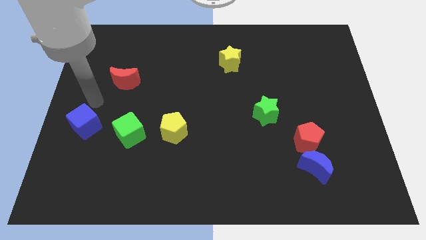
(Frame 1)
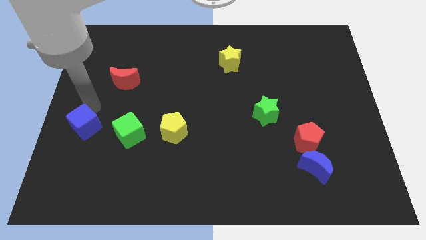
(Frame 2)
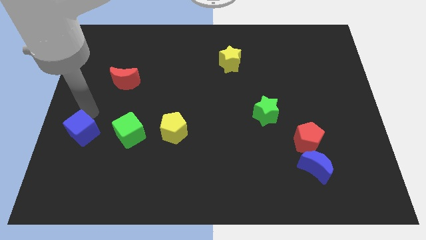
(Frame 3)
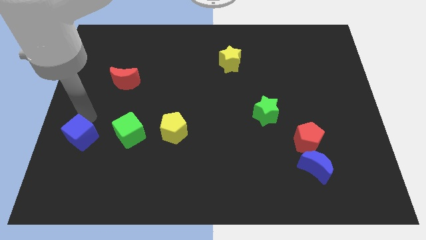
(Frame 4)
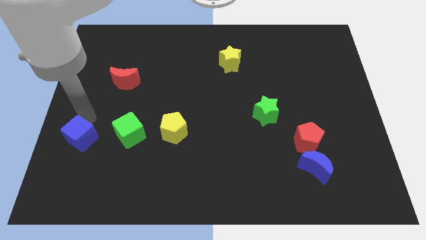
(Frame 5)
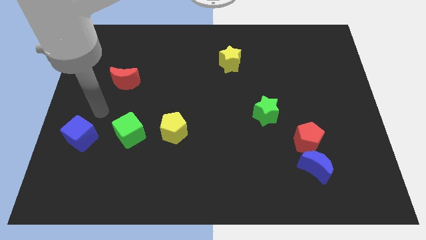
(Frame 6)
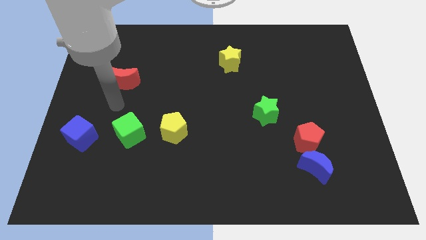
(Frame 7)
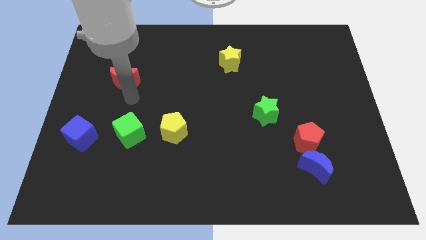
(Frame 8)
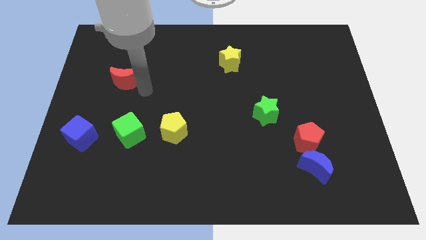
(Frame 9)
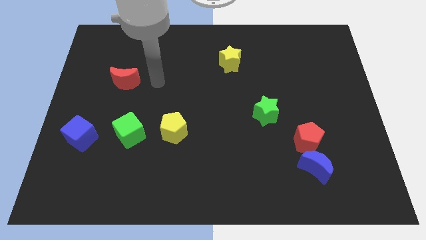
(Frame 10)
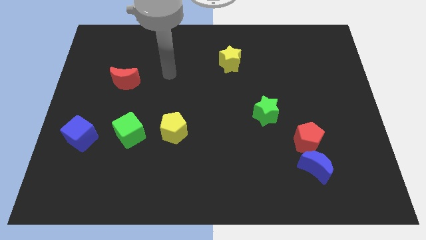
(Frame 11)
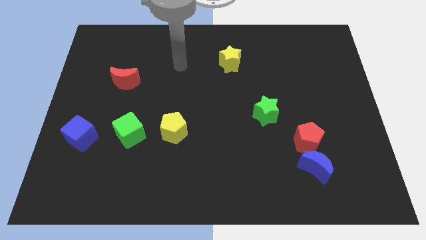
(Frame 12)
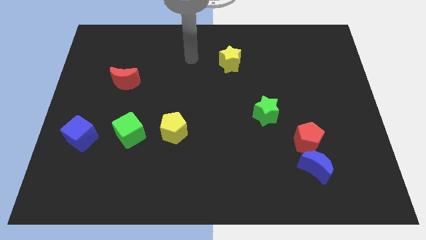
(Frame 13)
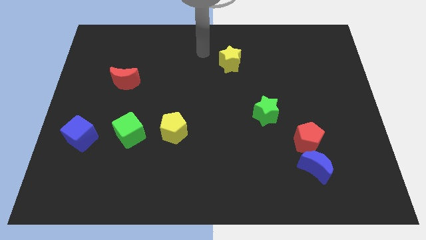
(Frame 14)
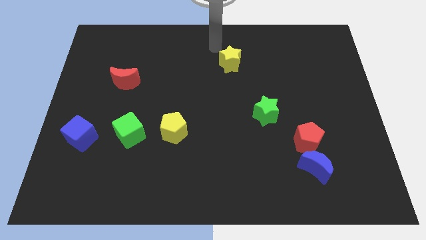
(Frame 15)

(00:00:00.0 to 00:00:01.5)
slightly move the blue cube towards the bottom of the board

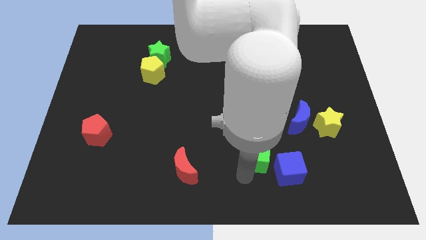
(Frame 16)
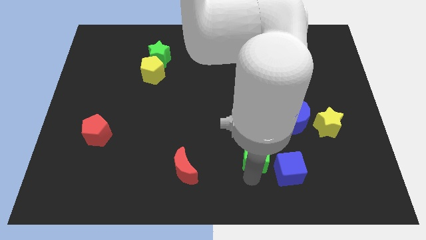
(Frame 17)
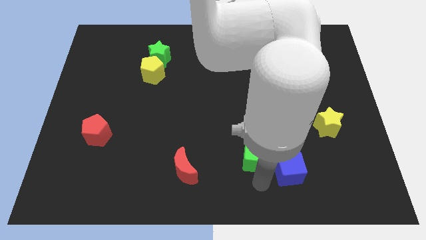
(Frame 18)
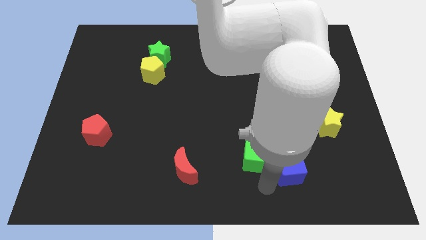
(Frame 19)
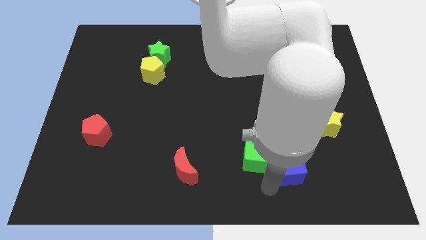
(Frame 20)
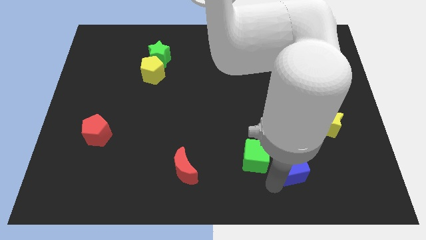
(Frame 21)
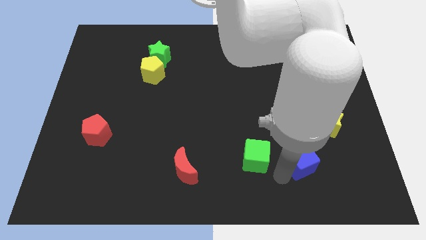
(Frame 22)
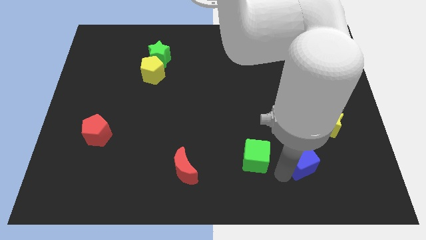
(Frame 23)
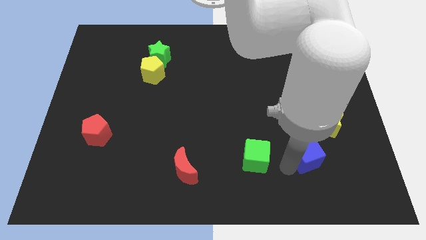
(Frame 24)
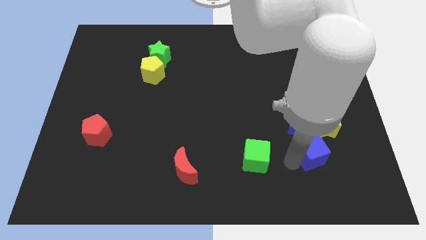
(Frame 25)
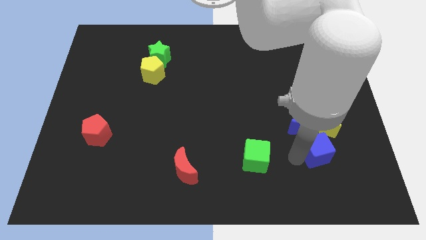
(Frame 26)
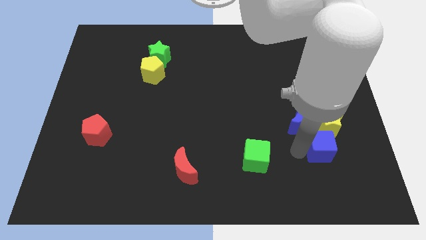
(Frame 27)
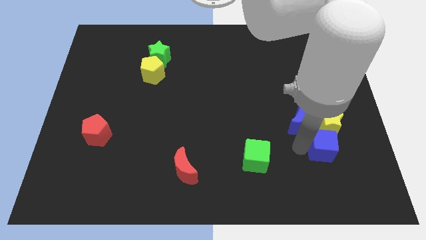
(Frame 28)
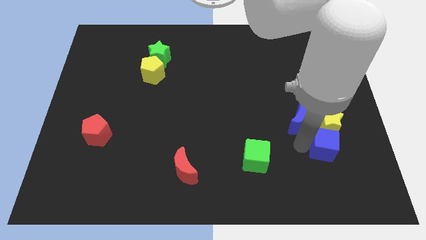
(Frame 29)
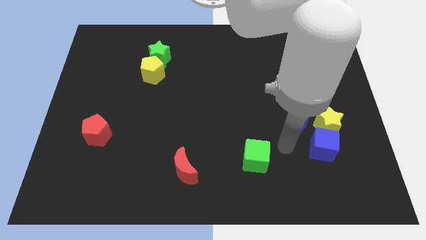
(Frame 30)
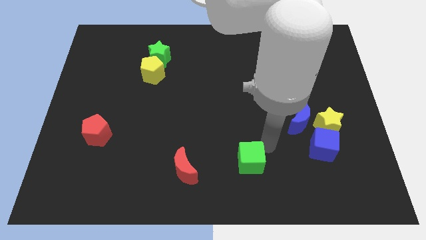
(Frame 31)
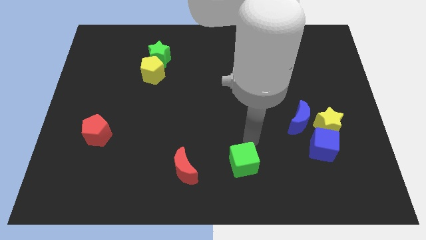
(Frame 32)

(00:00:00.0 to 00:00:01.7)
move the blue cube close to the yellow star

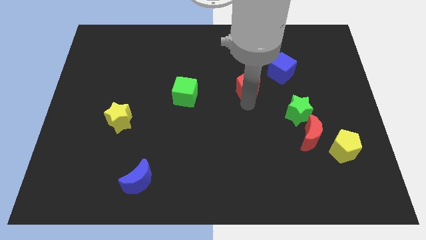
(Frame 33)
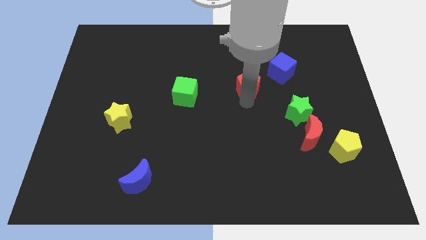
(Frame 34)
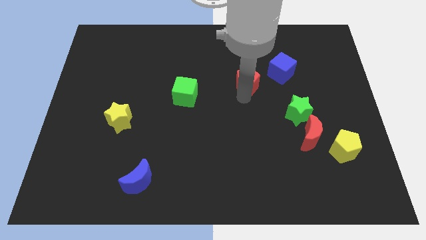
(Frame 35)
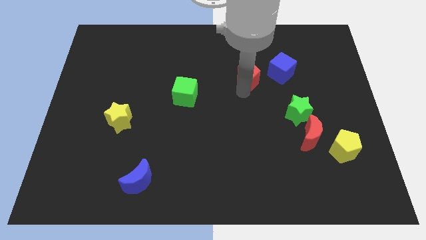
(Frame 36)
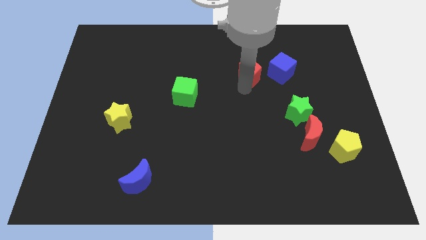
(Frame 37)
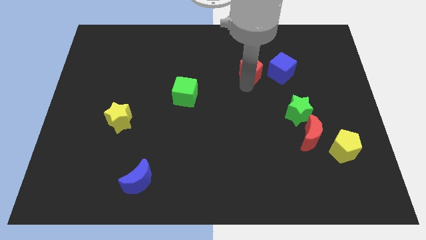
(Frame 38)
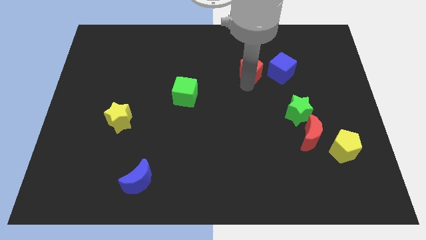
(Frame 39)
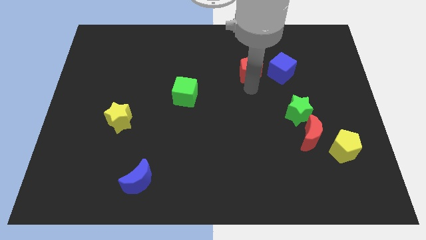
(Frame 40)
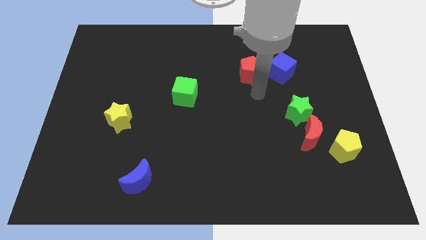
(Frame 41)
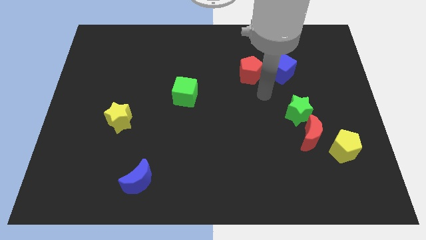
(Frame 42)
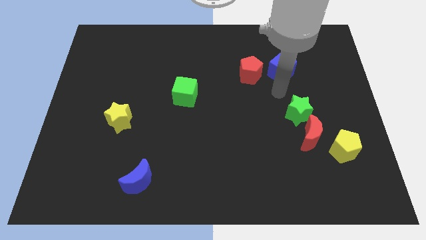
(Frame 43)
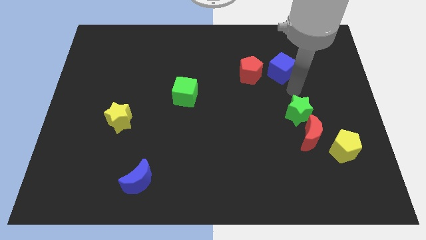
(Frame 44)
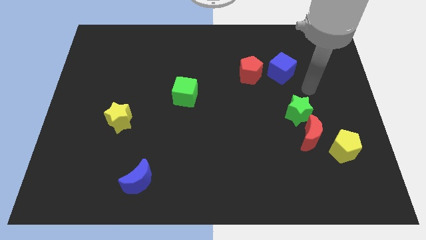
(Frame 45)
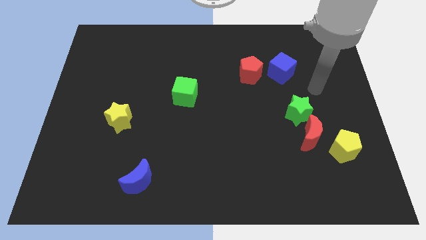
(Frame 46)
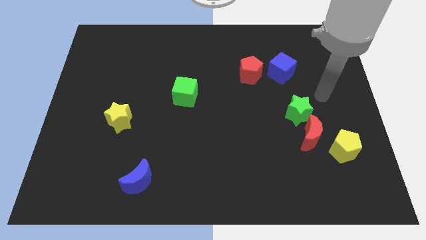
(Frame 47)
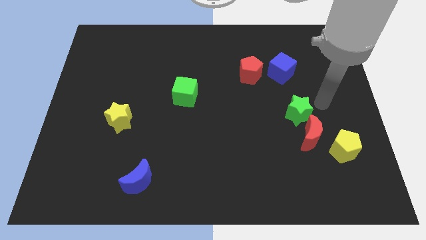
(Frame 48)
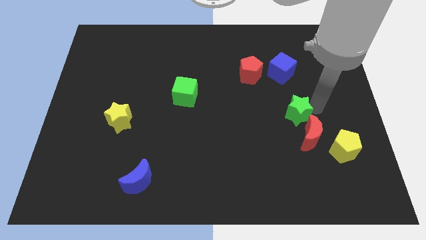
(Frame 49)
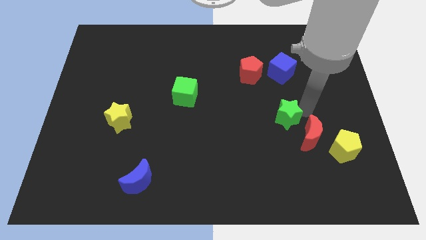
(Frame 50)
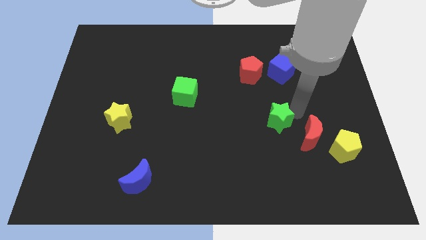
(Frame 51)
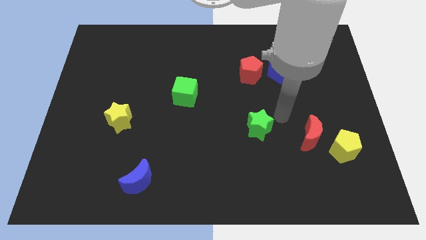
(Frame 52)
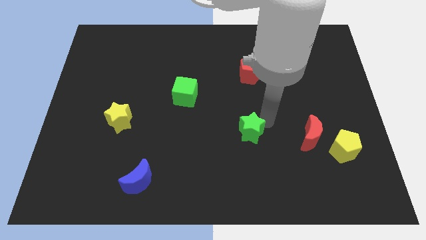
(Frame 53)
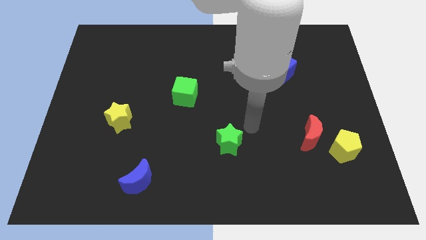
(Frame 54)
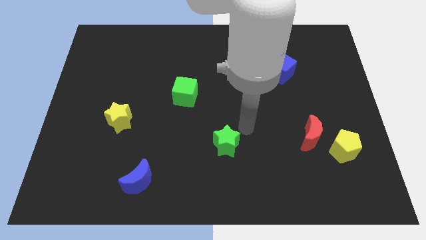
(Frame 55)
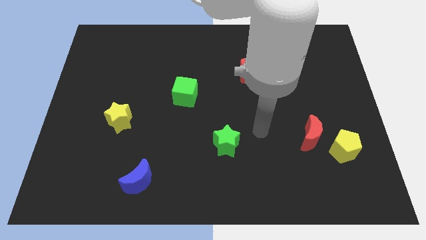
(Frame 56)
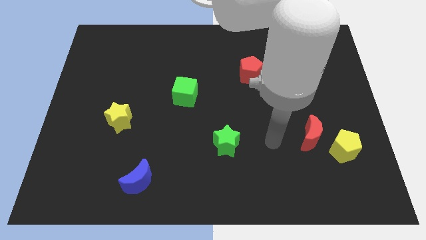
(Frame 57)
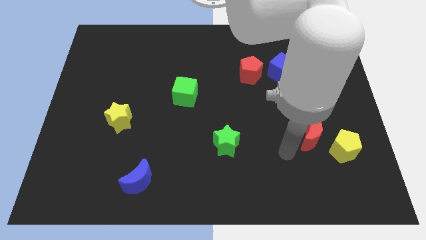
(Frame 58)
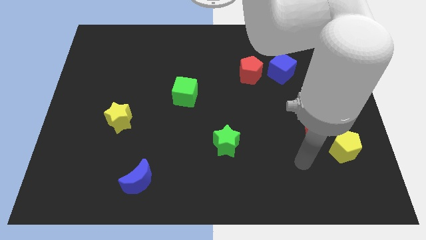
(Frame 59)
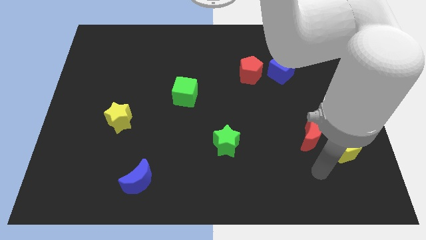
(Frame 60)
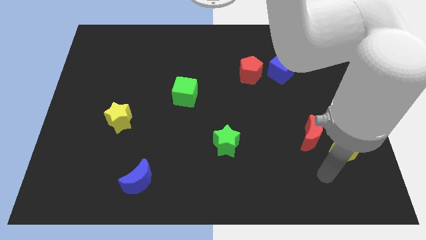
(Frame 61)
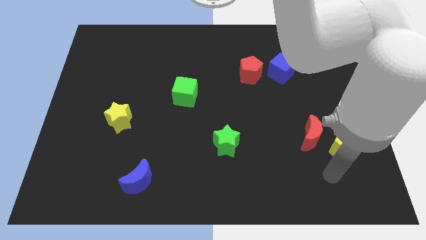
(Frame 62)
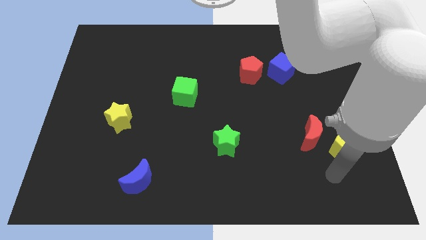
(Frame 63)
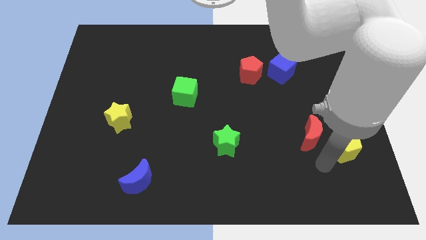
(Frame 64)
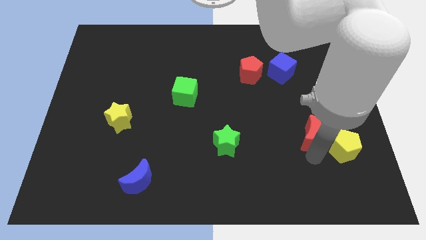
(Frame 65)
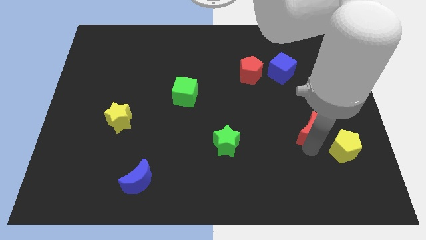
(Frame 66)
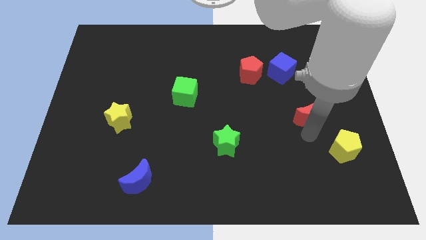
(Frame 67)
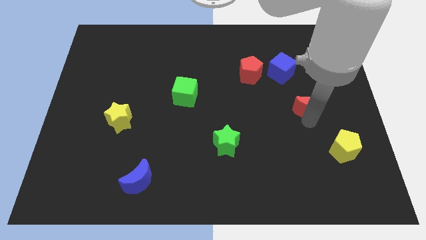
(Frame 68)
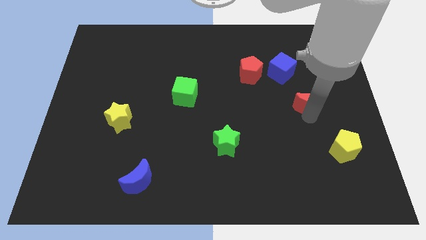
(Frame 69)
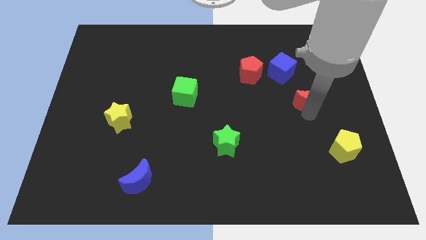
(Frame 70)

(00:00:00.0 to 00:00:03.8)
push the green star diagonally to the bottom right of the green cube

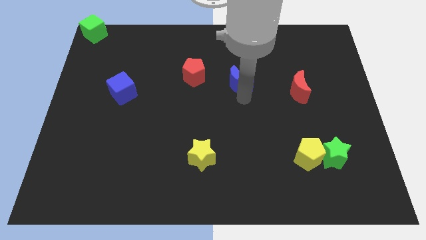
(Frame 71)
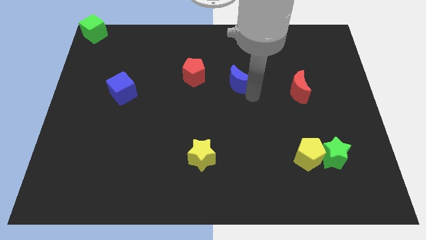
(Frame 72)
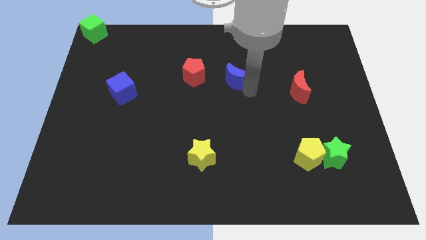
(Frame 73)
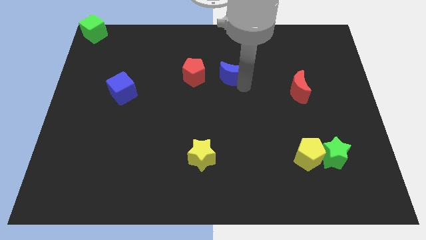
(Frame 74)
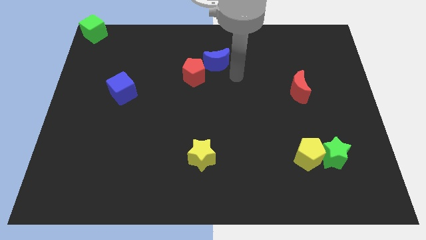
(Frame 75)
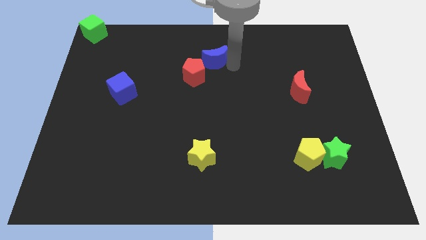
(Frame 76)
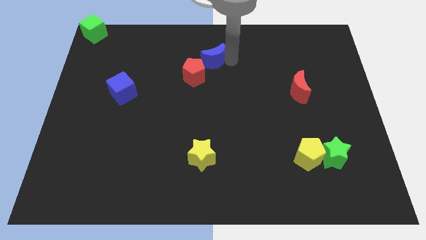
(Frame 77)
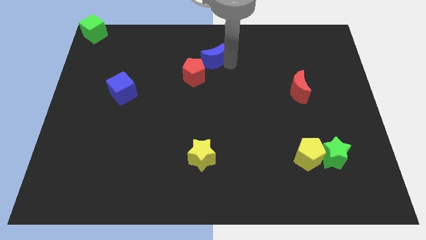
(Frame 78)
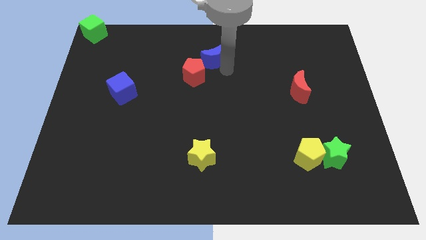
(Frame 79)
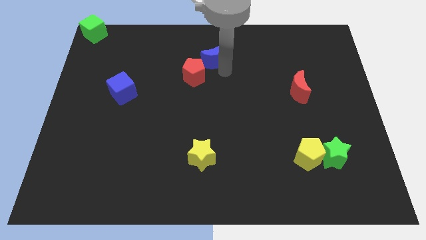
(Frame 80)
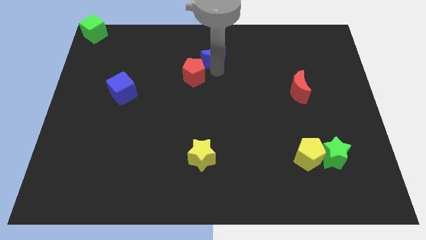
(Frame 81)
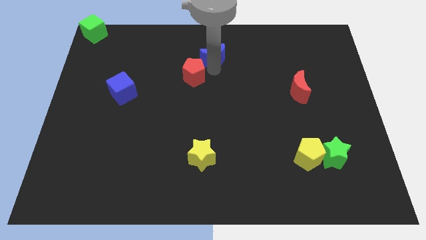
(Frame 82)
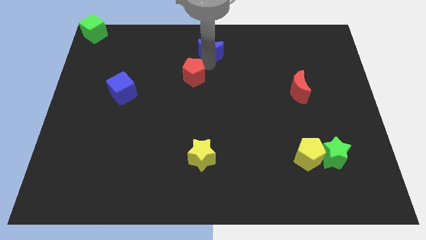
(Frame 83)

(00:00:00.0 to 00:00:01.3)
push blue moon to the top centre of the board

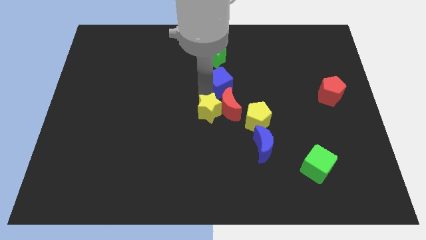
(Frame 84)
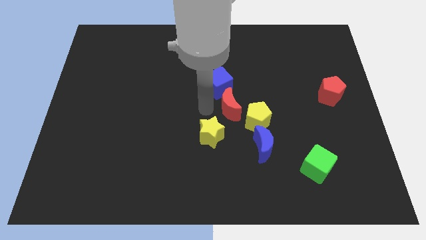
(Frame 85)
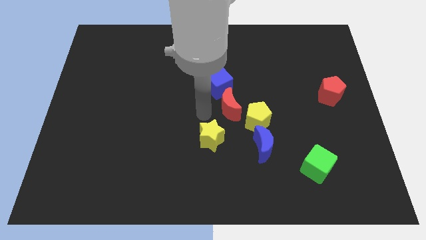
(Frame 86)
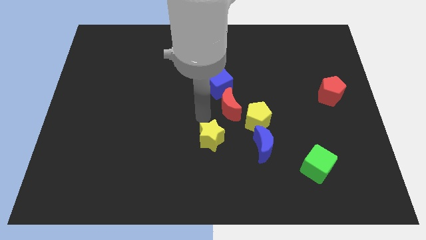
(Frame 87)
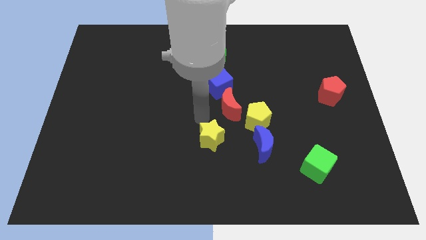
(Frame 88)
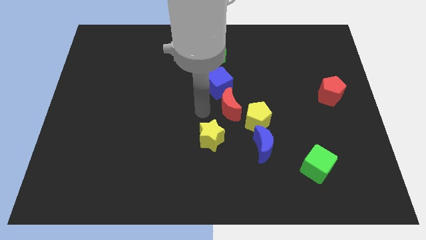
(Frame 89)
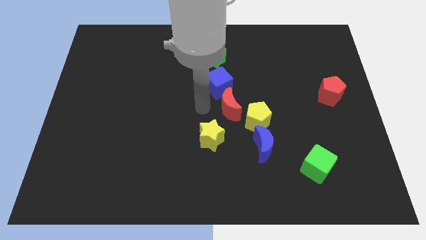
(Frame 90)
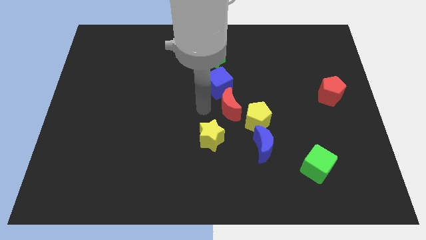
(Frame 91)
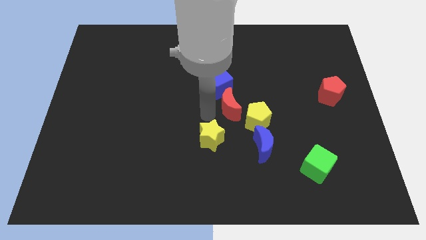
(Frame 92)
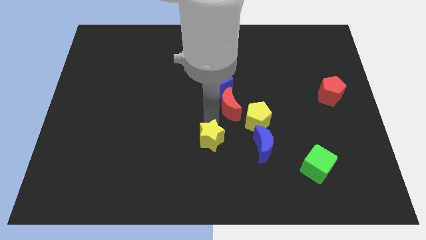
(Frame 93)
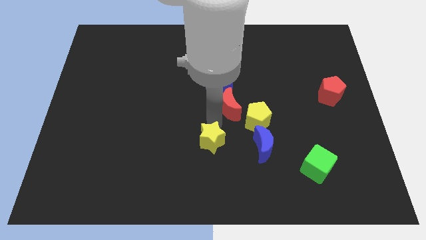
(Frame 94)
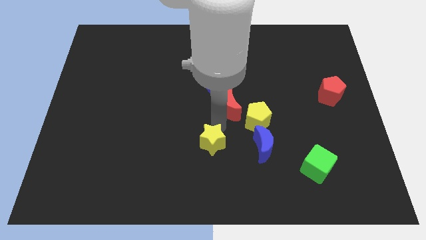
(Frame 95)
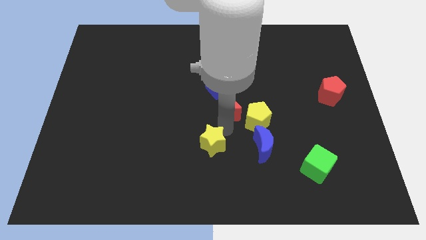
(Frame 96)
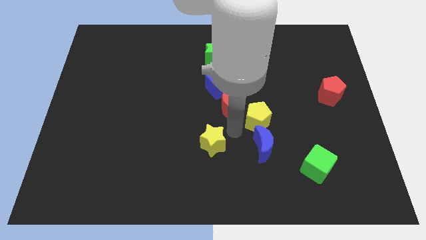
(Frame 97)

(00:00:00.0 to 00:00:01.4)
move the yellow star to the bottom of the board
